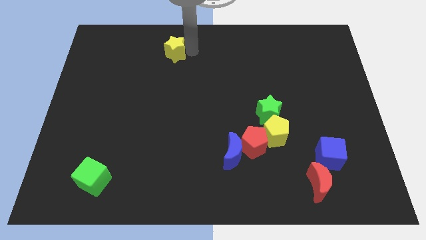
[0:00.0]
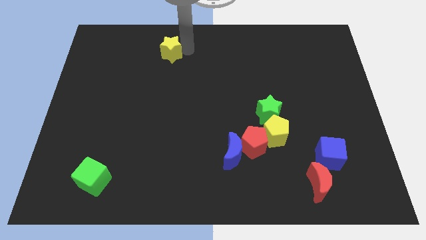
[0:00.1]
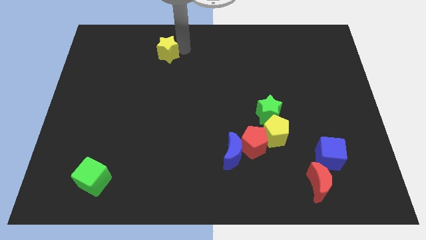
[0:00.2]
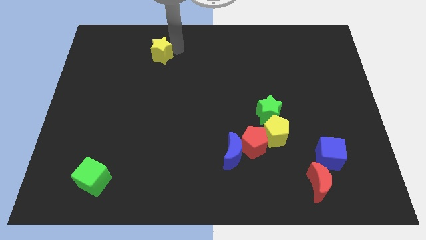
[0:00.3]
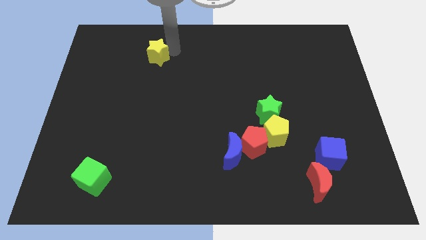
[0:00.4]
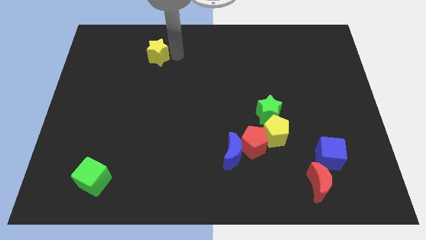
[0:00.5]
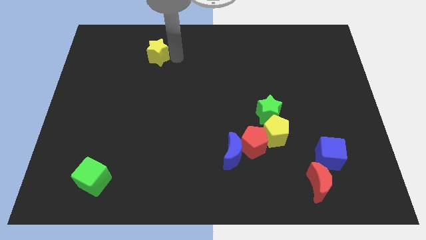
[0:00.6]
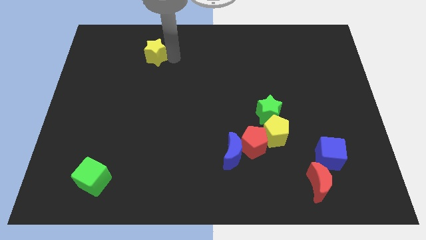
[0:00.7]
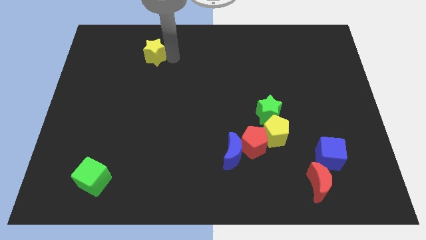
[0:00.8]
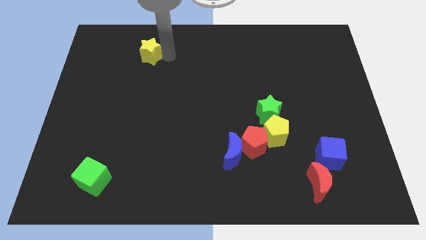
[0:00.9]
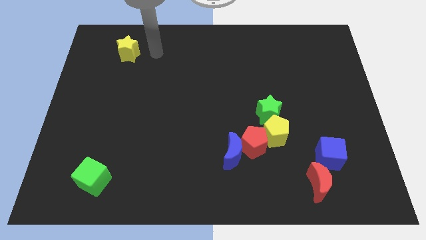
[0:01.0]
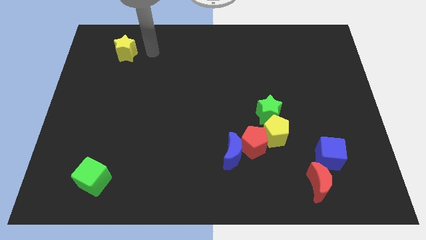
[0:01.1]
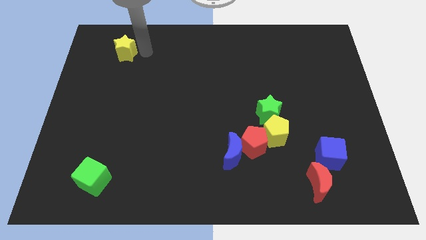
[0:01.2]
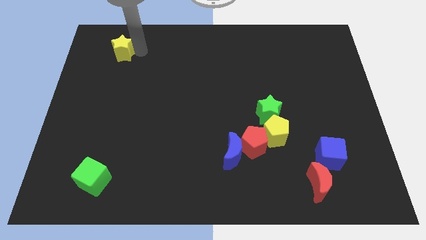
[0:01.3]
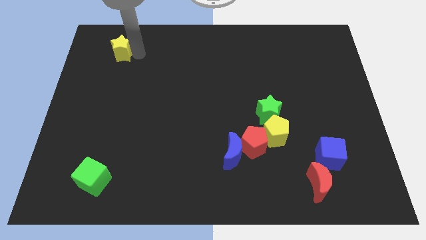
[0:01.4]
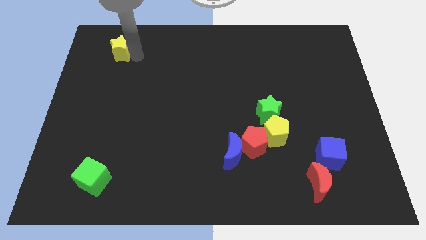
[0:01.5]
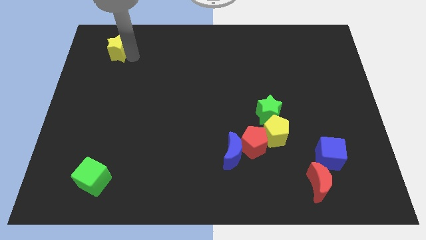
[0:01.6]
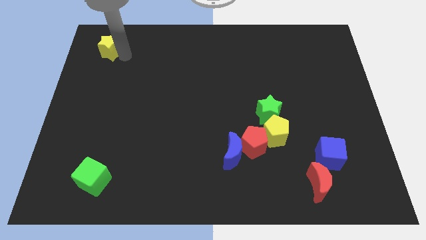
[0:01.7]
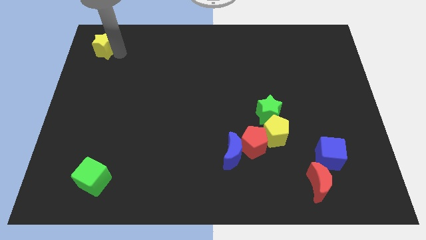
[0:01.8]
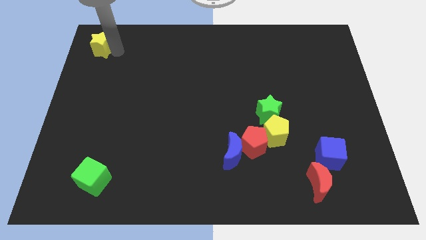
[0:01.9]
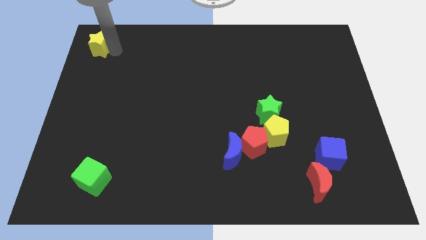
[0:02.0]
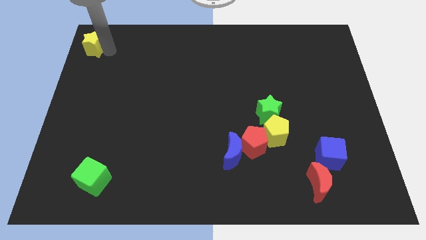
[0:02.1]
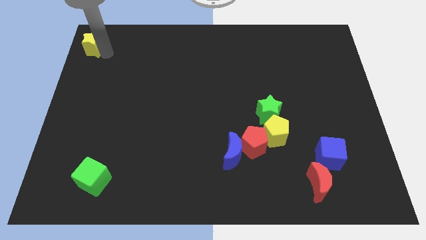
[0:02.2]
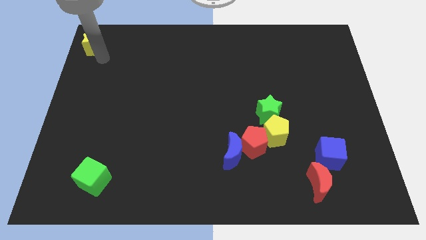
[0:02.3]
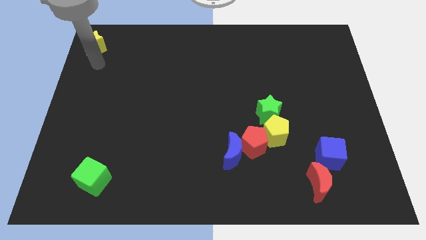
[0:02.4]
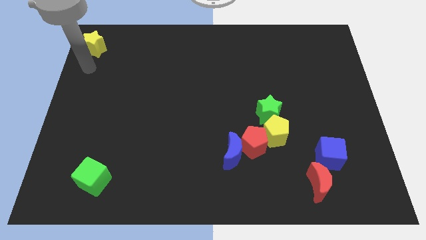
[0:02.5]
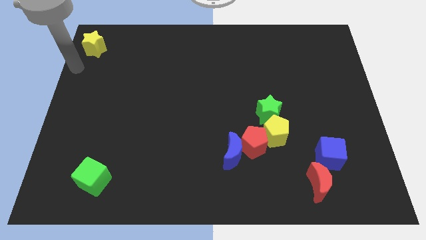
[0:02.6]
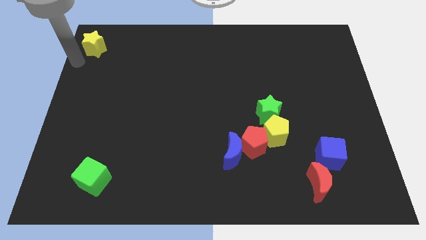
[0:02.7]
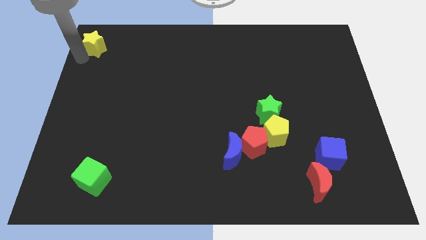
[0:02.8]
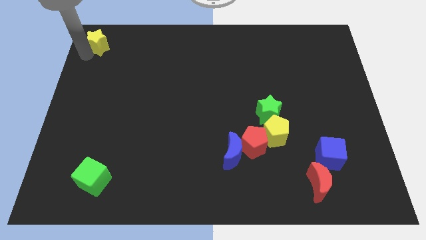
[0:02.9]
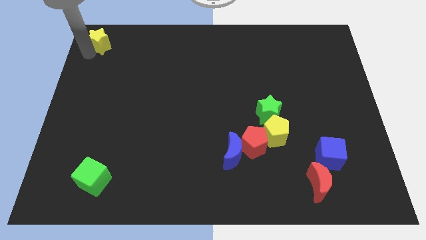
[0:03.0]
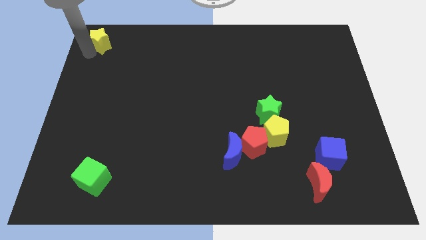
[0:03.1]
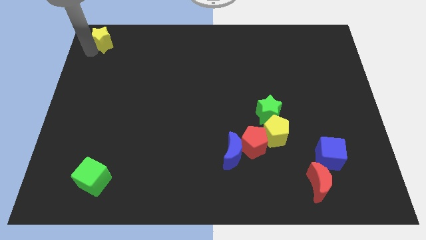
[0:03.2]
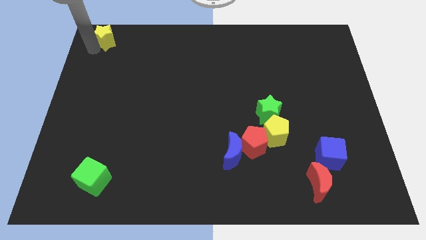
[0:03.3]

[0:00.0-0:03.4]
move the yellow star to the top left corner of the board

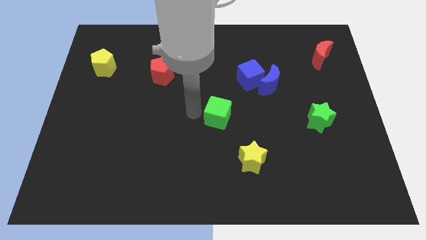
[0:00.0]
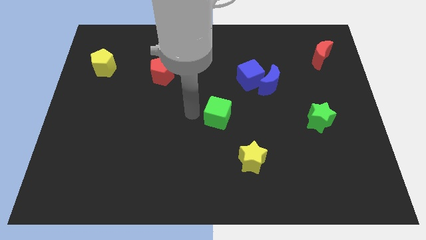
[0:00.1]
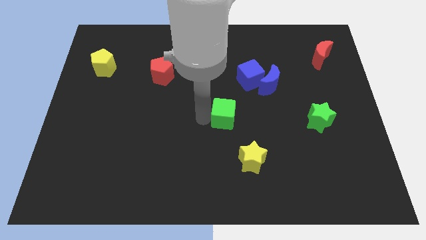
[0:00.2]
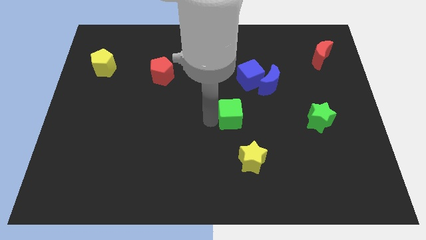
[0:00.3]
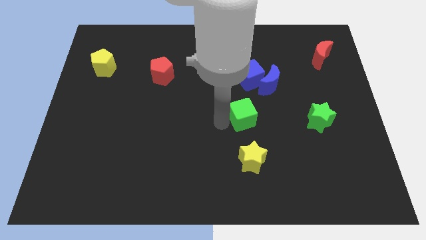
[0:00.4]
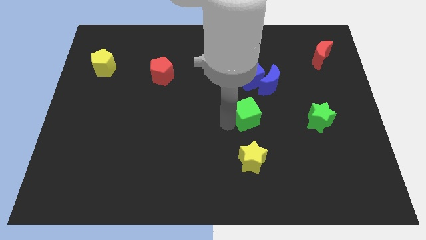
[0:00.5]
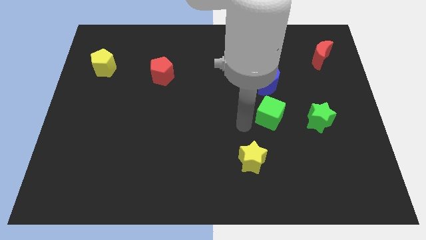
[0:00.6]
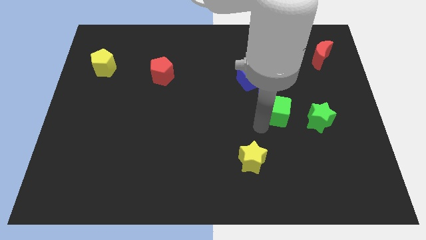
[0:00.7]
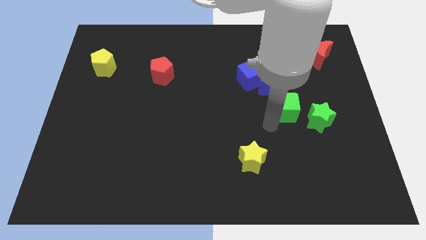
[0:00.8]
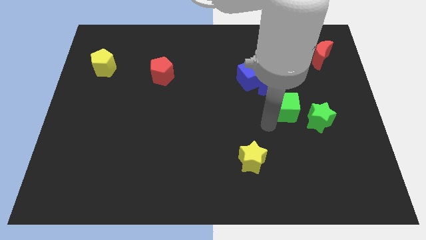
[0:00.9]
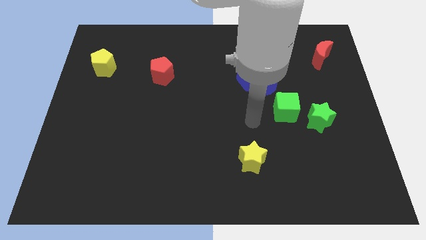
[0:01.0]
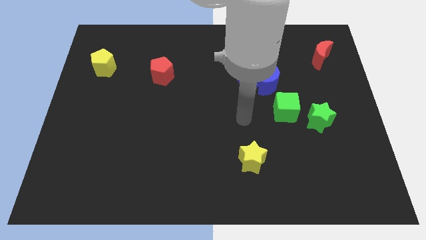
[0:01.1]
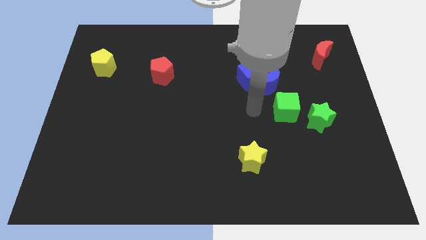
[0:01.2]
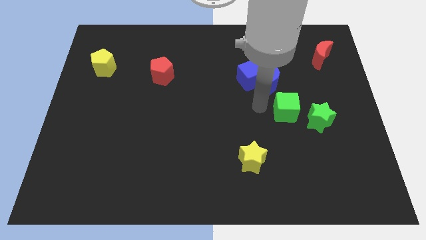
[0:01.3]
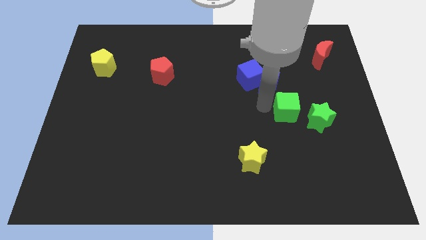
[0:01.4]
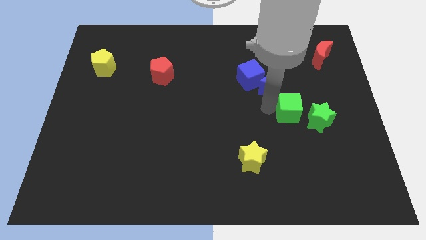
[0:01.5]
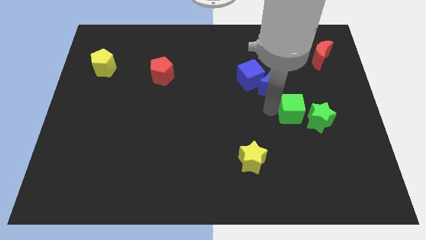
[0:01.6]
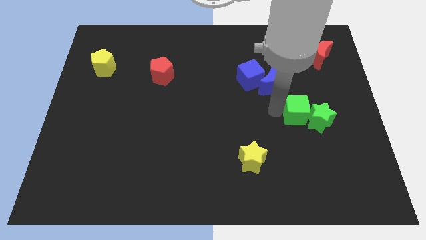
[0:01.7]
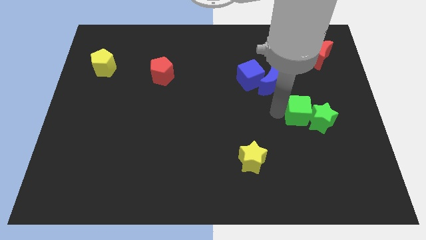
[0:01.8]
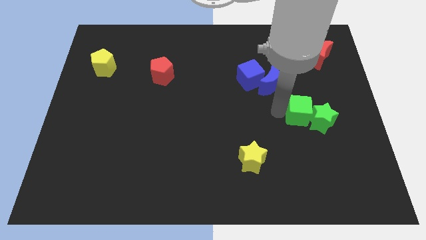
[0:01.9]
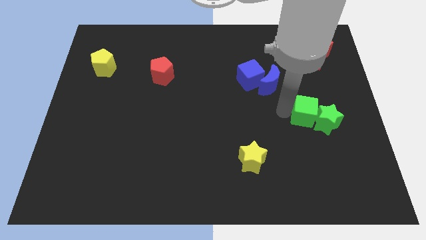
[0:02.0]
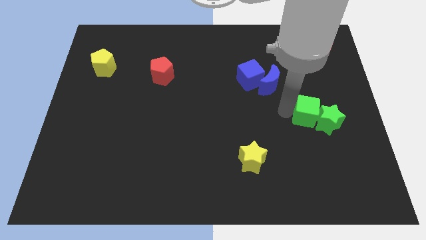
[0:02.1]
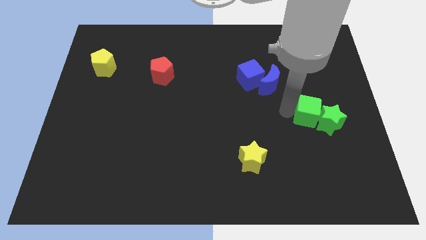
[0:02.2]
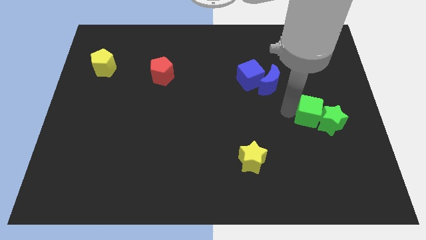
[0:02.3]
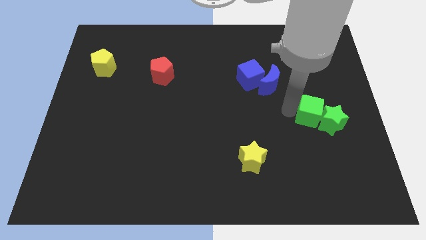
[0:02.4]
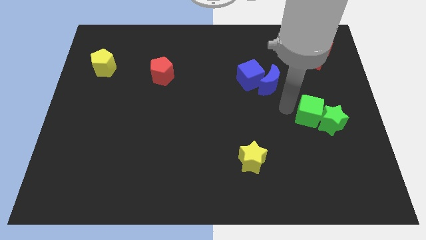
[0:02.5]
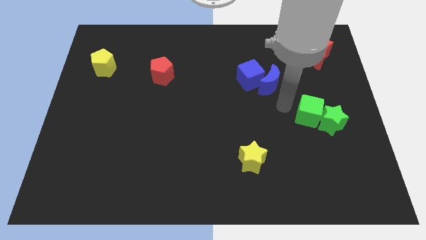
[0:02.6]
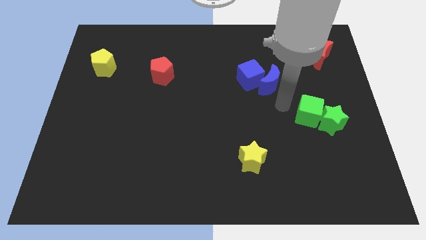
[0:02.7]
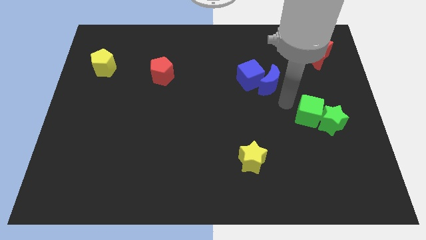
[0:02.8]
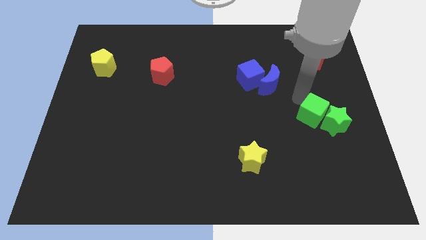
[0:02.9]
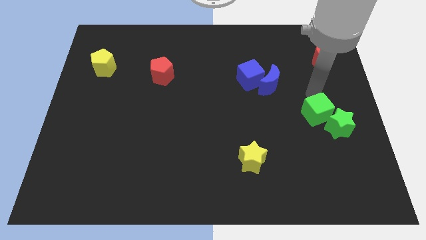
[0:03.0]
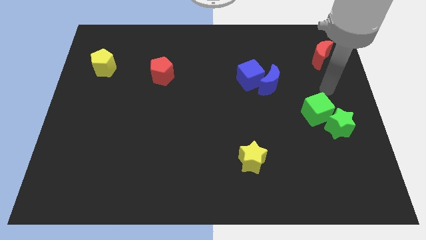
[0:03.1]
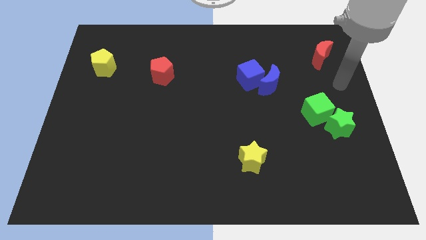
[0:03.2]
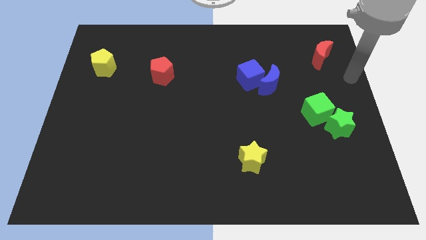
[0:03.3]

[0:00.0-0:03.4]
move the green cube into green star

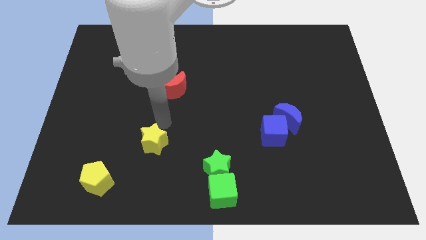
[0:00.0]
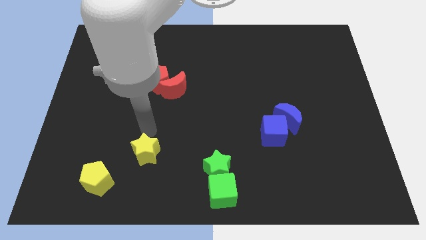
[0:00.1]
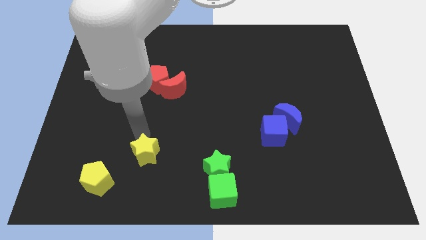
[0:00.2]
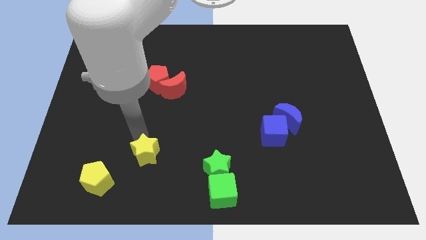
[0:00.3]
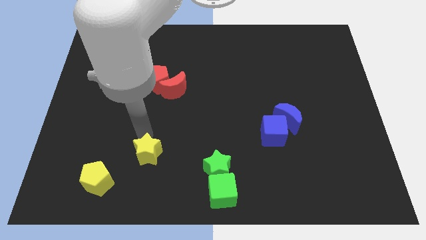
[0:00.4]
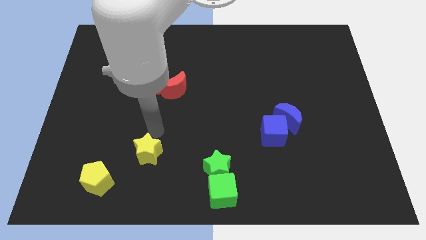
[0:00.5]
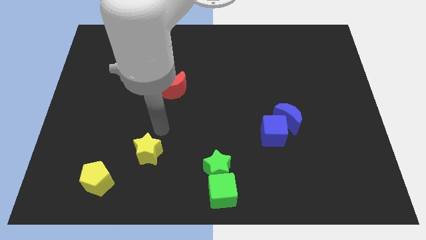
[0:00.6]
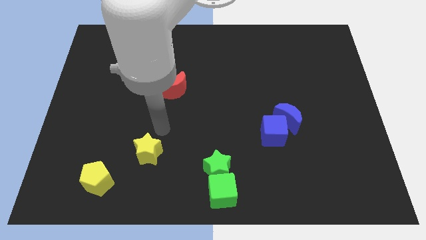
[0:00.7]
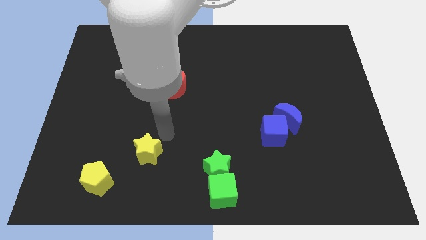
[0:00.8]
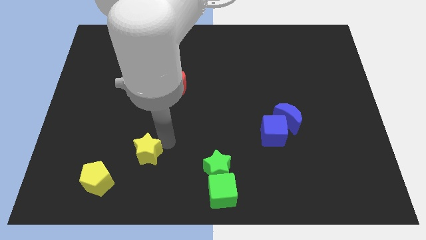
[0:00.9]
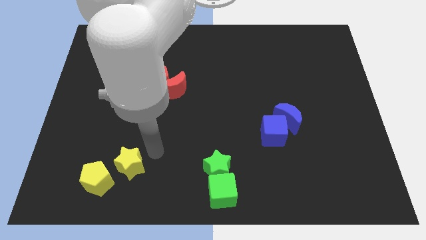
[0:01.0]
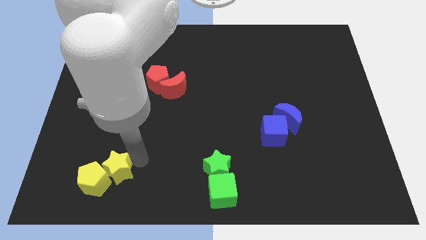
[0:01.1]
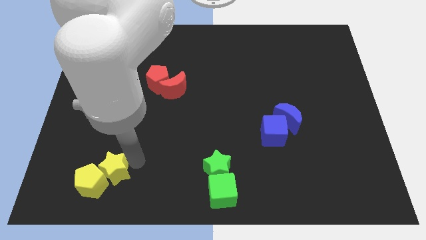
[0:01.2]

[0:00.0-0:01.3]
move the yellow star into the yellow pentagon

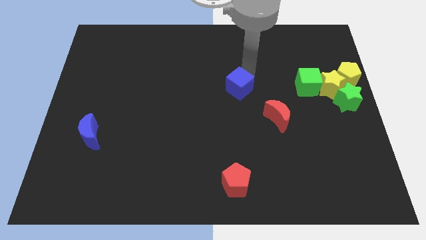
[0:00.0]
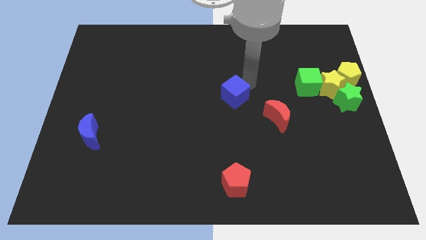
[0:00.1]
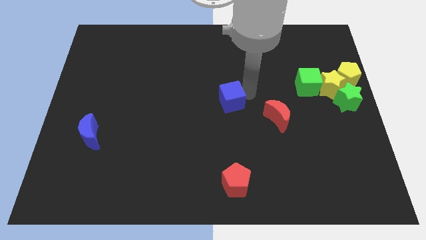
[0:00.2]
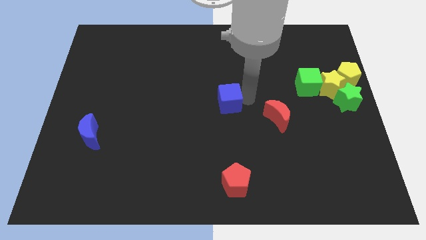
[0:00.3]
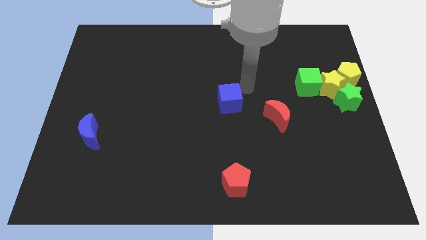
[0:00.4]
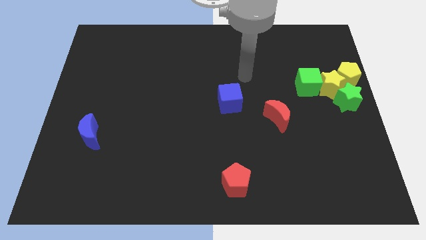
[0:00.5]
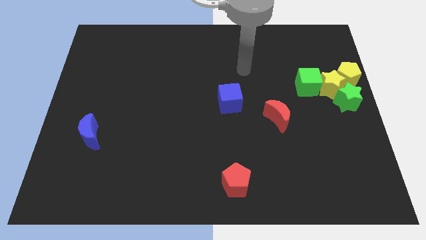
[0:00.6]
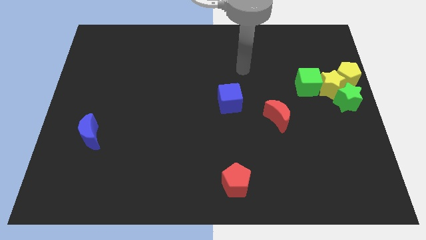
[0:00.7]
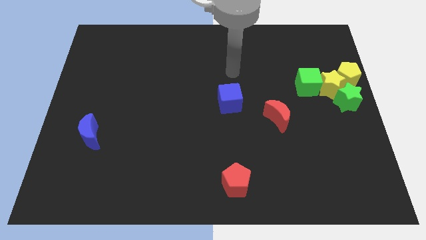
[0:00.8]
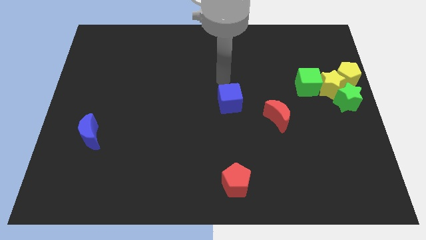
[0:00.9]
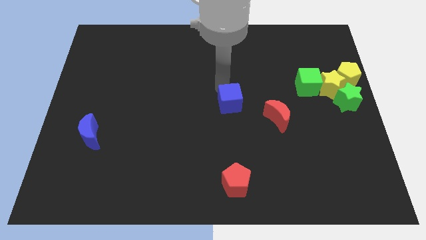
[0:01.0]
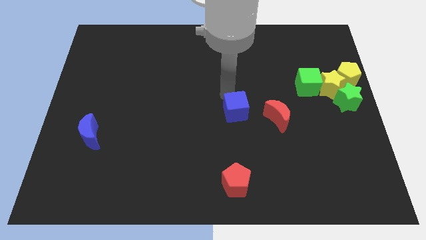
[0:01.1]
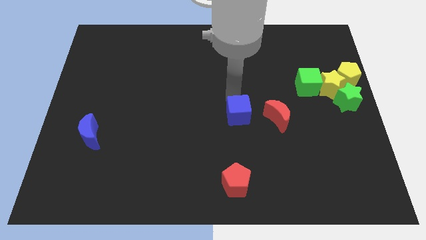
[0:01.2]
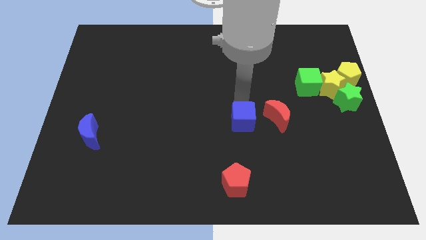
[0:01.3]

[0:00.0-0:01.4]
place the blue cube to the left side of the red moon
